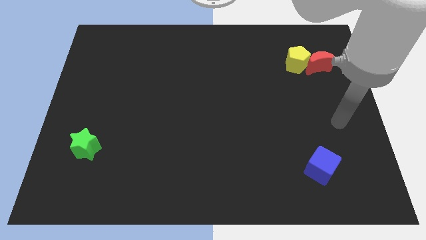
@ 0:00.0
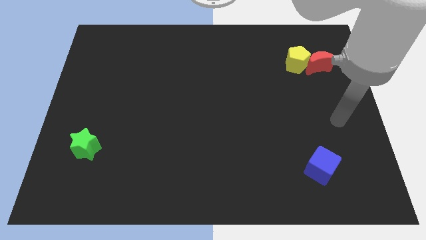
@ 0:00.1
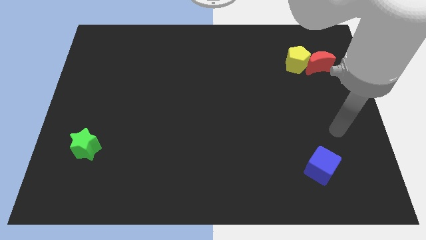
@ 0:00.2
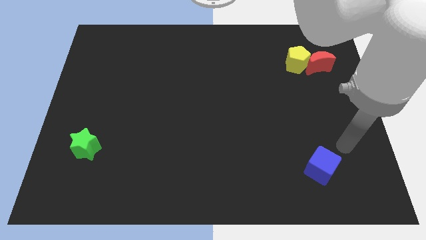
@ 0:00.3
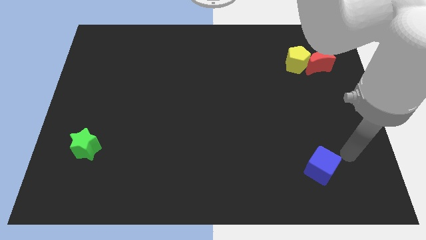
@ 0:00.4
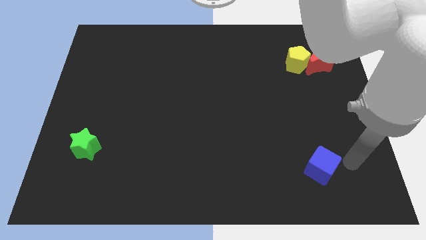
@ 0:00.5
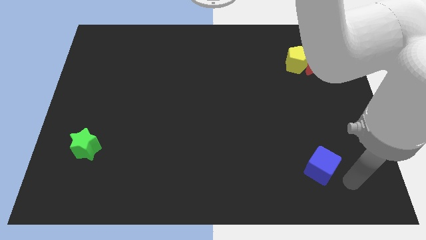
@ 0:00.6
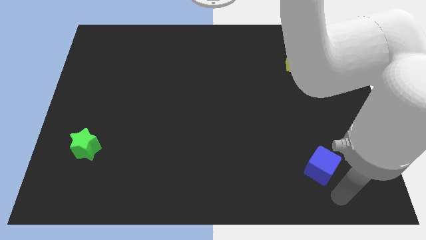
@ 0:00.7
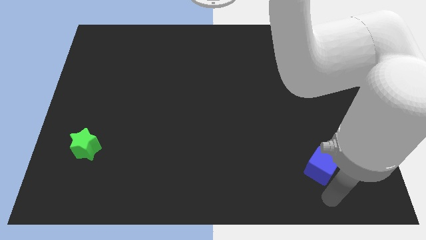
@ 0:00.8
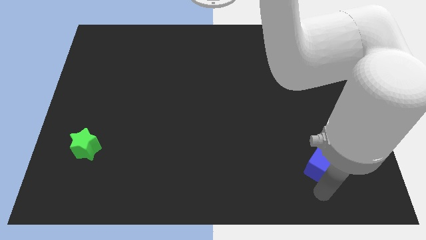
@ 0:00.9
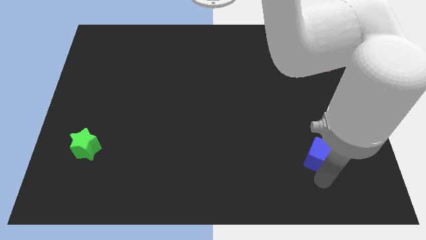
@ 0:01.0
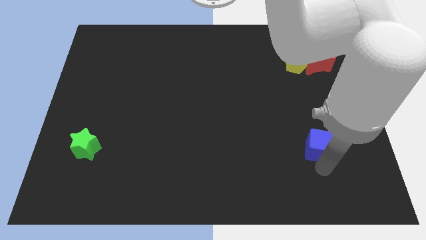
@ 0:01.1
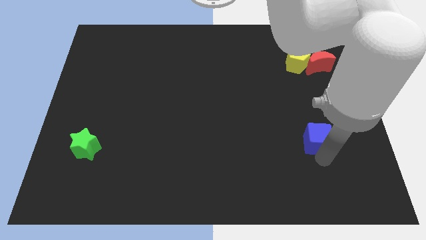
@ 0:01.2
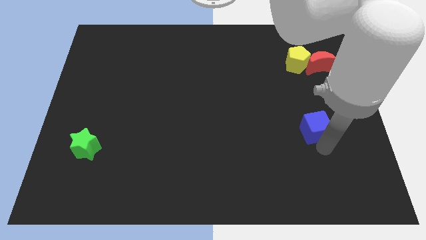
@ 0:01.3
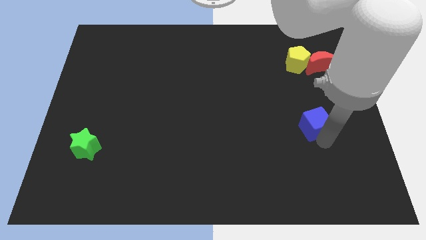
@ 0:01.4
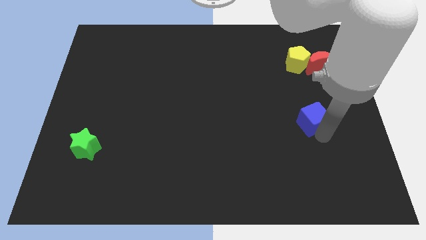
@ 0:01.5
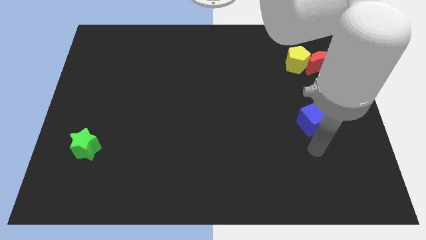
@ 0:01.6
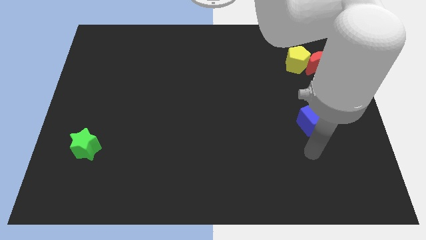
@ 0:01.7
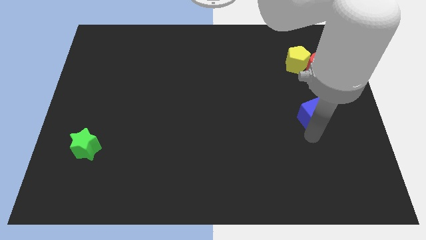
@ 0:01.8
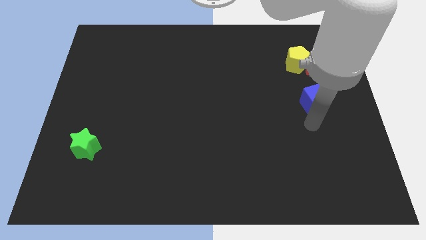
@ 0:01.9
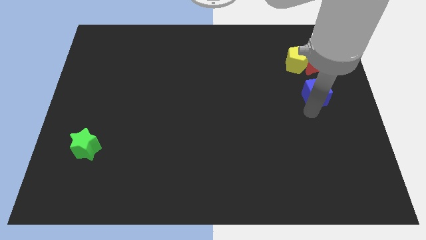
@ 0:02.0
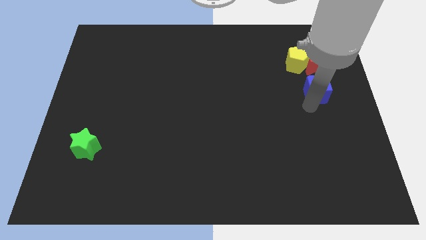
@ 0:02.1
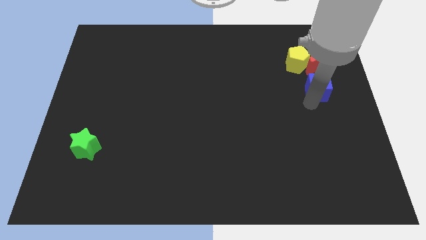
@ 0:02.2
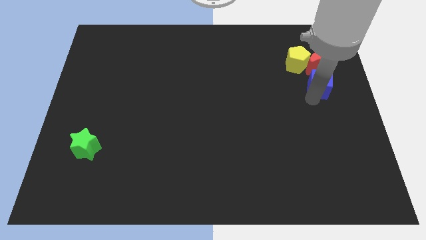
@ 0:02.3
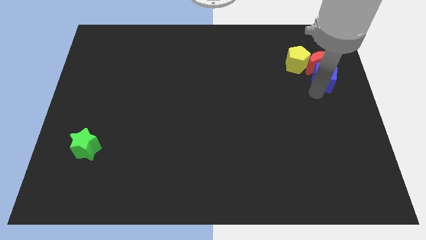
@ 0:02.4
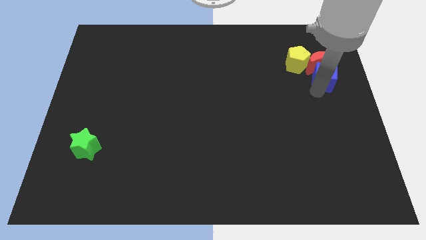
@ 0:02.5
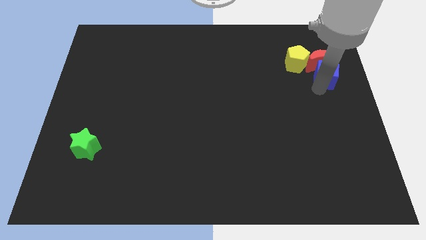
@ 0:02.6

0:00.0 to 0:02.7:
push the blue cube towards the moon

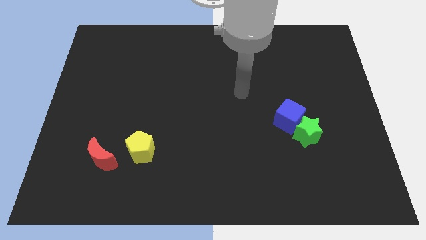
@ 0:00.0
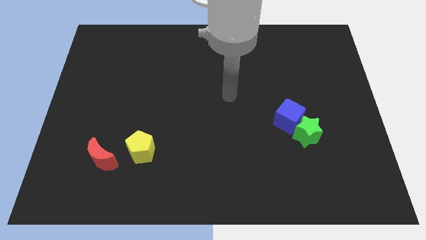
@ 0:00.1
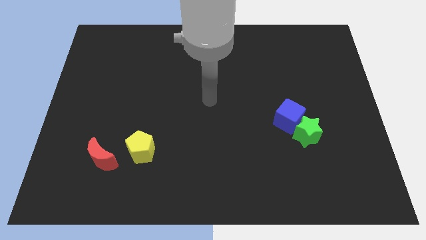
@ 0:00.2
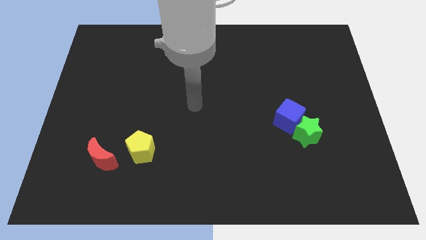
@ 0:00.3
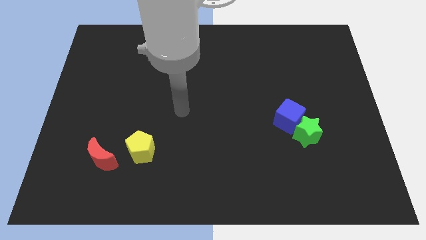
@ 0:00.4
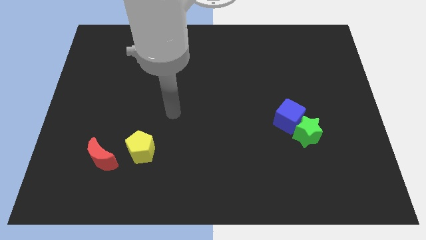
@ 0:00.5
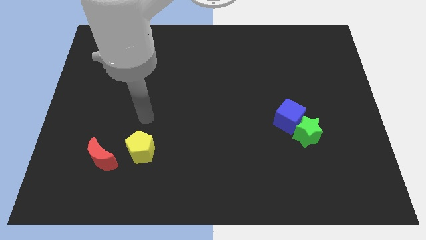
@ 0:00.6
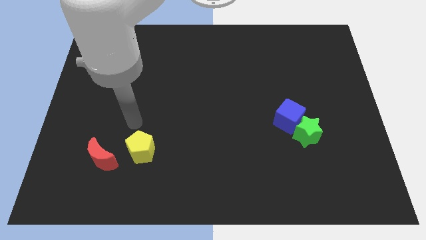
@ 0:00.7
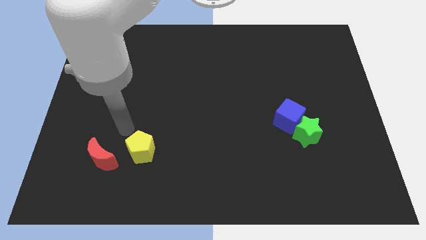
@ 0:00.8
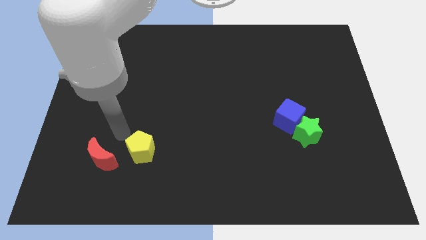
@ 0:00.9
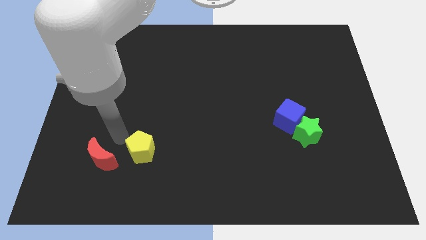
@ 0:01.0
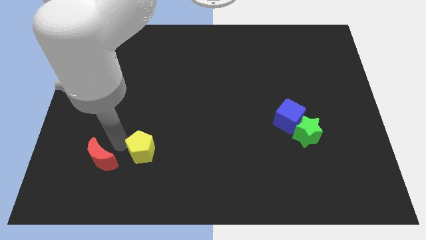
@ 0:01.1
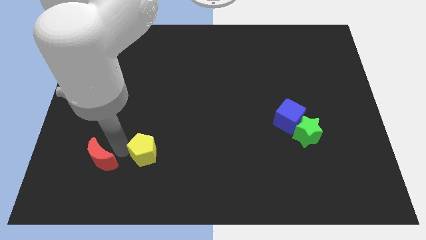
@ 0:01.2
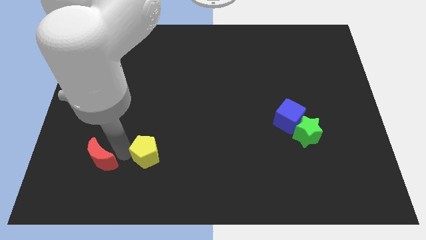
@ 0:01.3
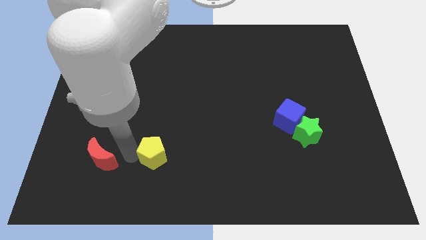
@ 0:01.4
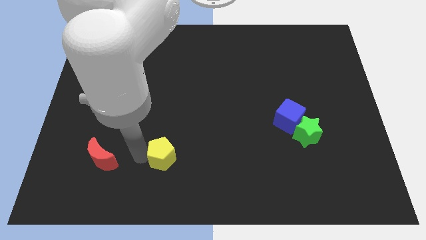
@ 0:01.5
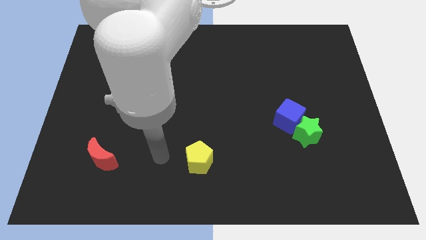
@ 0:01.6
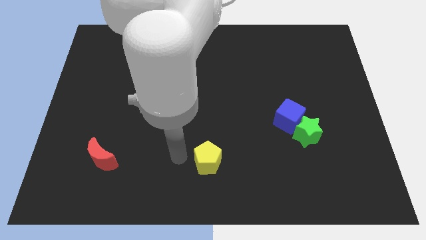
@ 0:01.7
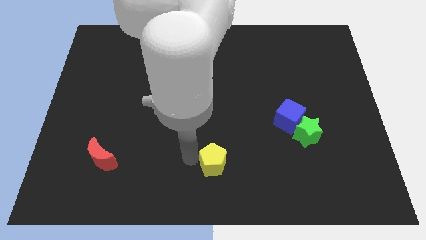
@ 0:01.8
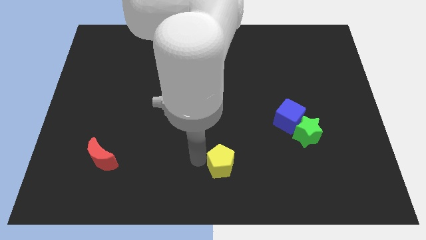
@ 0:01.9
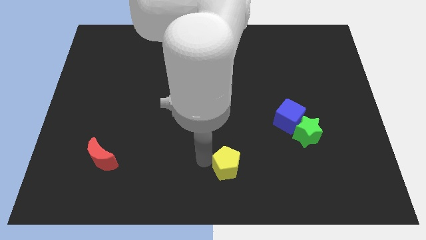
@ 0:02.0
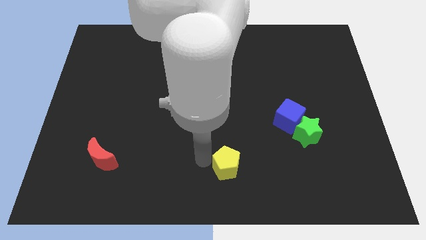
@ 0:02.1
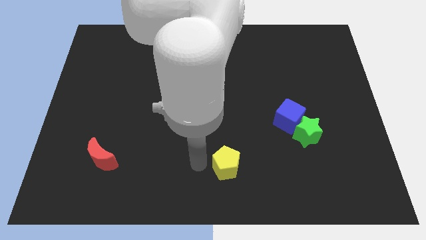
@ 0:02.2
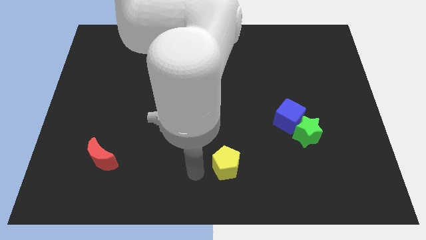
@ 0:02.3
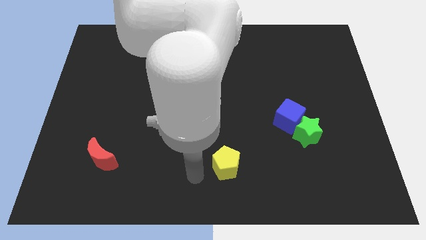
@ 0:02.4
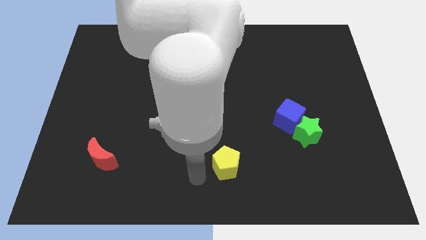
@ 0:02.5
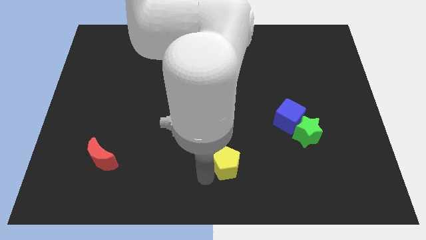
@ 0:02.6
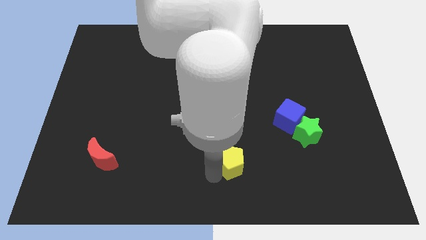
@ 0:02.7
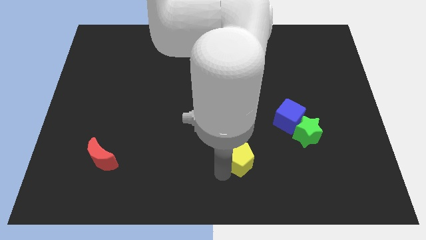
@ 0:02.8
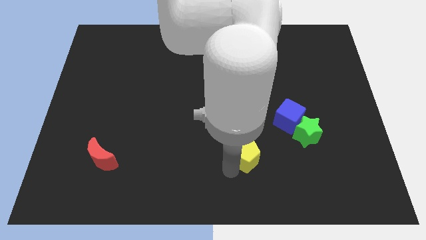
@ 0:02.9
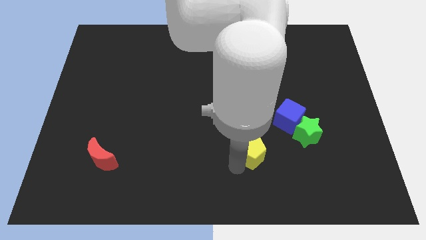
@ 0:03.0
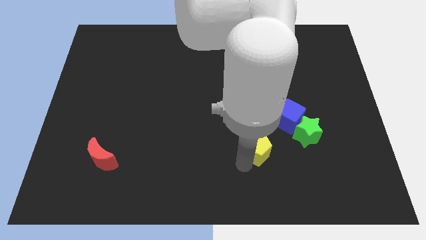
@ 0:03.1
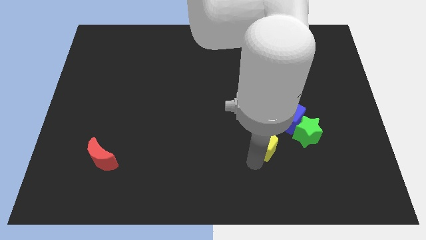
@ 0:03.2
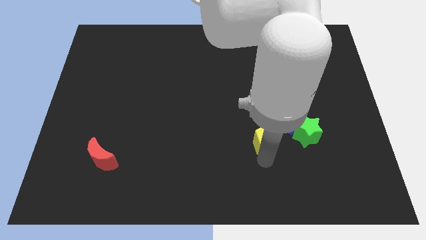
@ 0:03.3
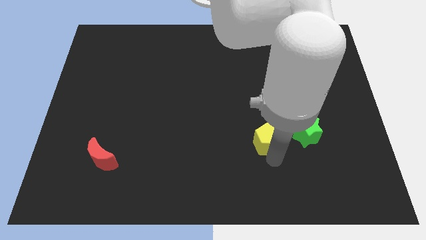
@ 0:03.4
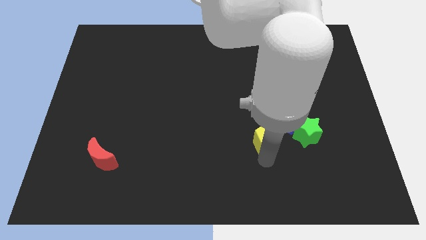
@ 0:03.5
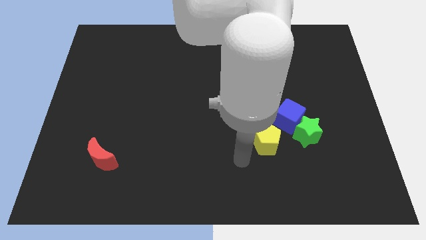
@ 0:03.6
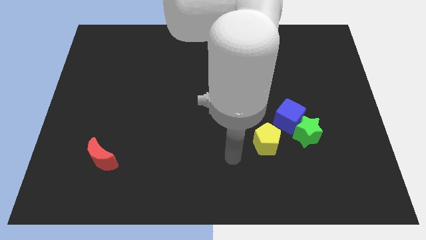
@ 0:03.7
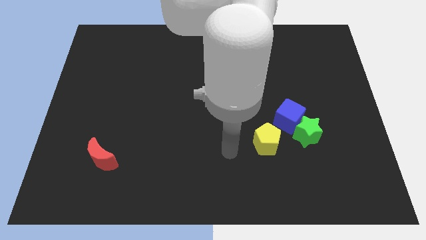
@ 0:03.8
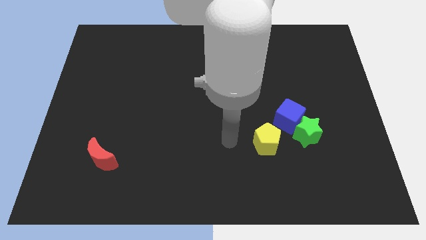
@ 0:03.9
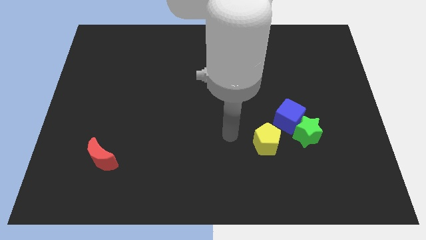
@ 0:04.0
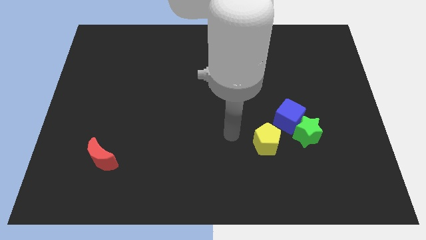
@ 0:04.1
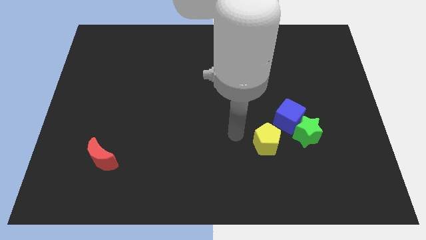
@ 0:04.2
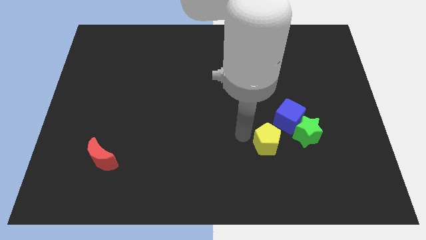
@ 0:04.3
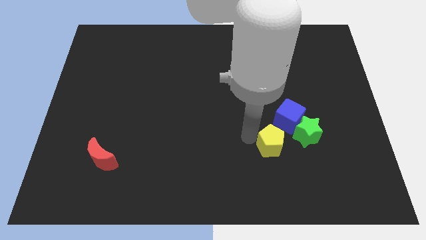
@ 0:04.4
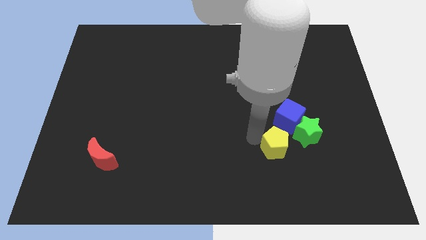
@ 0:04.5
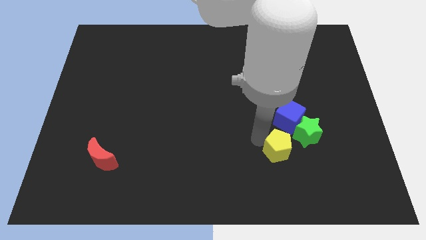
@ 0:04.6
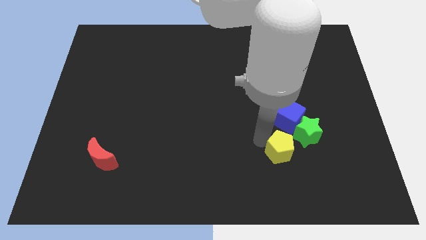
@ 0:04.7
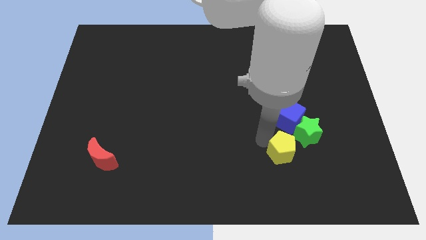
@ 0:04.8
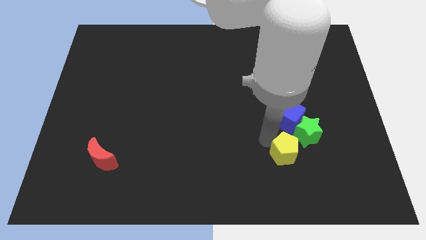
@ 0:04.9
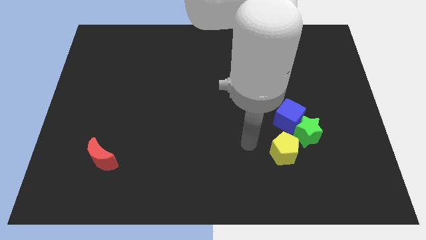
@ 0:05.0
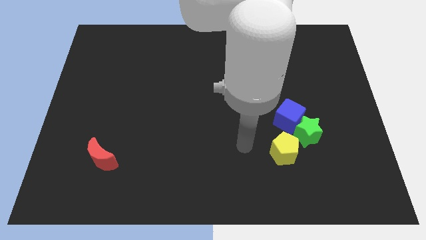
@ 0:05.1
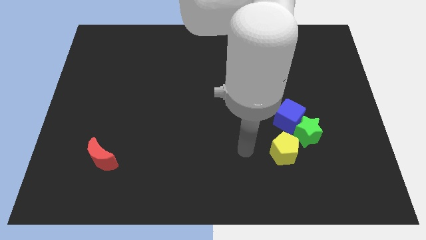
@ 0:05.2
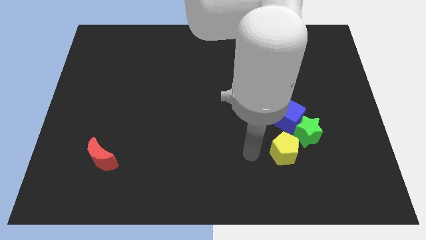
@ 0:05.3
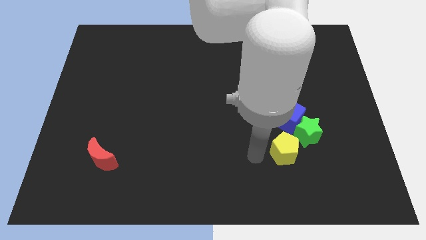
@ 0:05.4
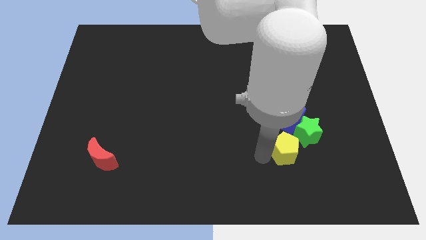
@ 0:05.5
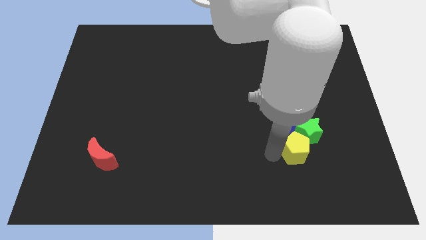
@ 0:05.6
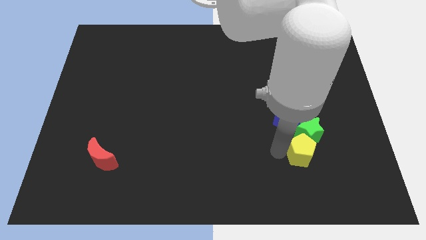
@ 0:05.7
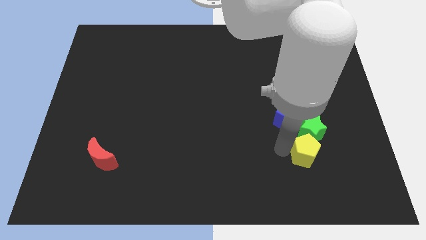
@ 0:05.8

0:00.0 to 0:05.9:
put the yellow pentagon close to the green block
